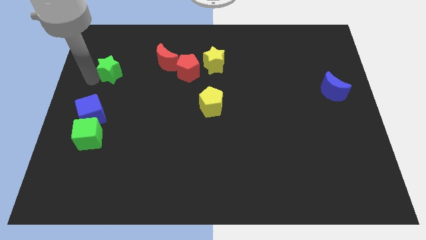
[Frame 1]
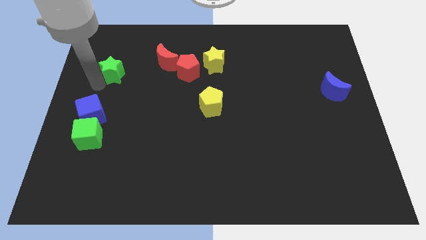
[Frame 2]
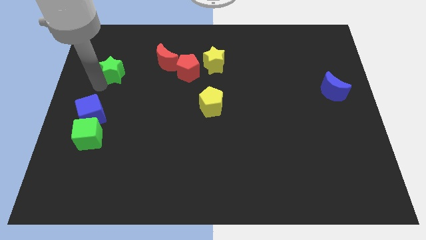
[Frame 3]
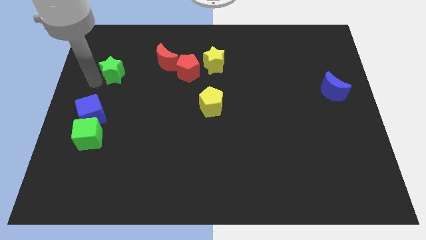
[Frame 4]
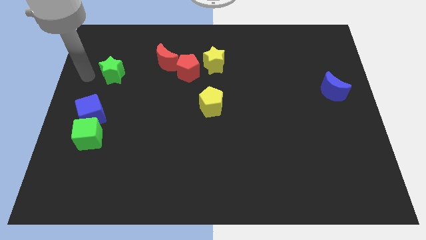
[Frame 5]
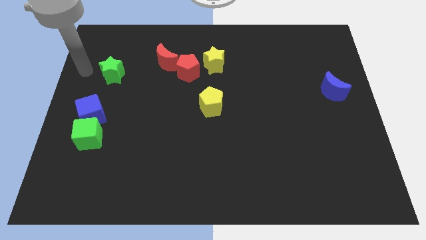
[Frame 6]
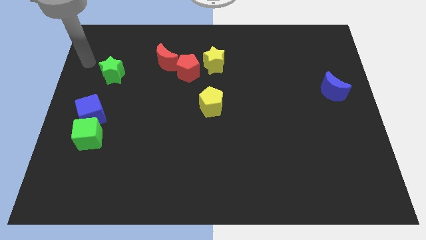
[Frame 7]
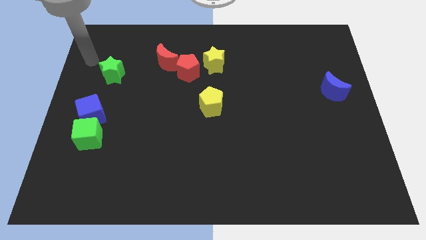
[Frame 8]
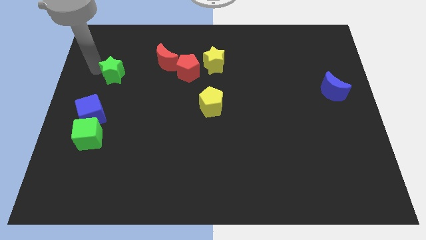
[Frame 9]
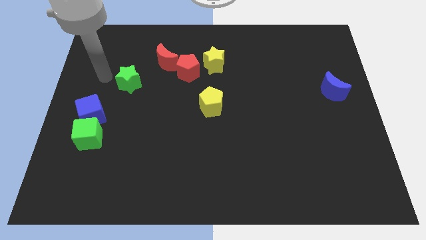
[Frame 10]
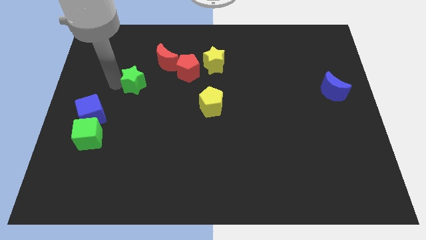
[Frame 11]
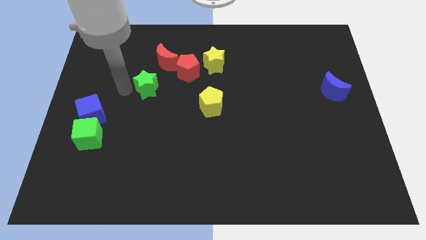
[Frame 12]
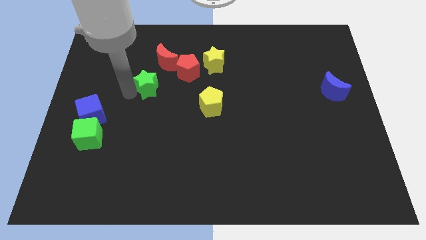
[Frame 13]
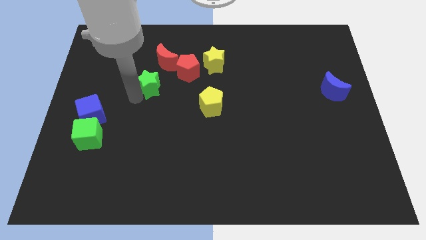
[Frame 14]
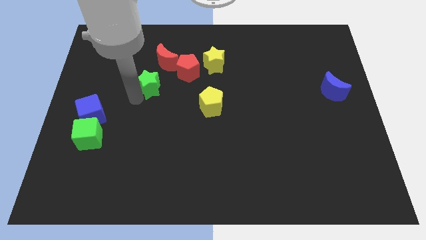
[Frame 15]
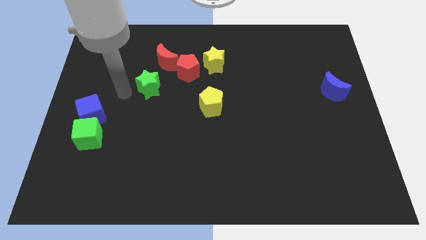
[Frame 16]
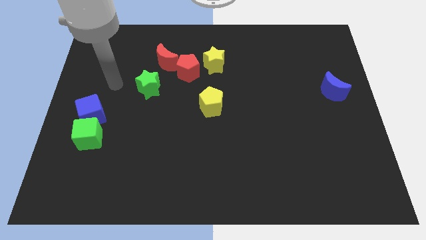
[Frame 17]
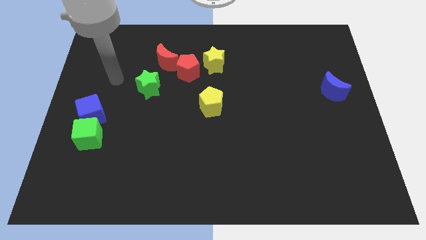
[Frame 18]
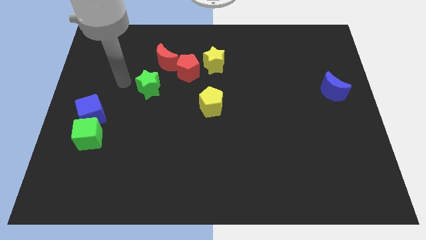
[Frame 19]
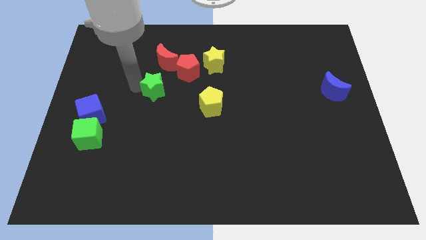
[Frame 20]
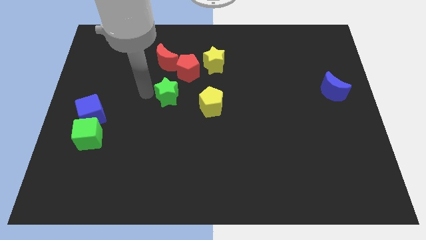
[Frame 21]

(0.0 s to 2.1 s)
slide green star towards yellow pentagon

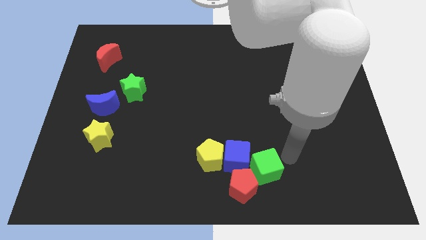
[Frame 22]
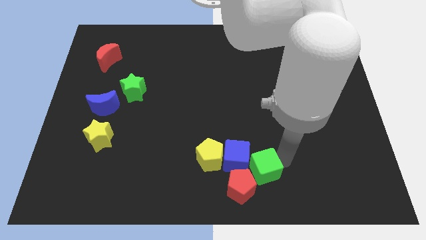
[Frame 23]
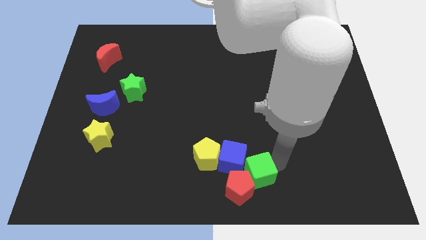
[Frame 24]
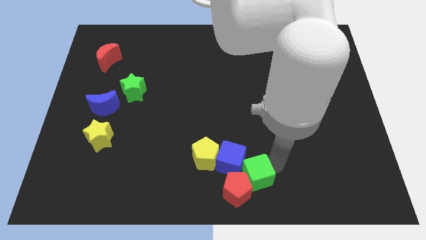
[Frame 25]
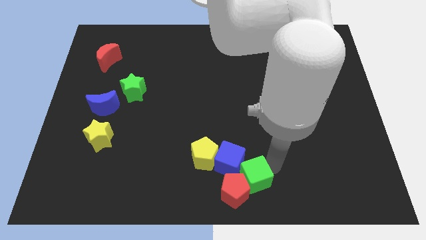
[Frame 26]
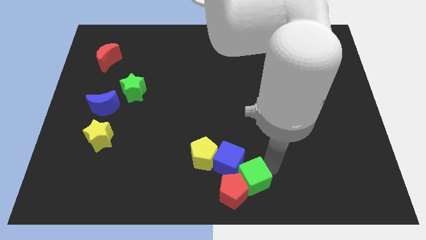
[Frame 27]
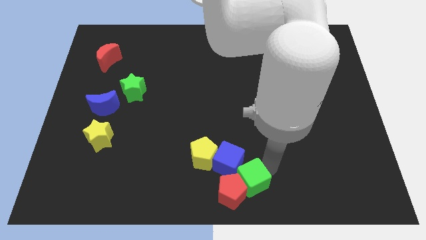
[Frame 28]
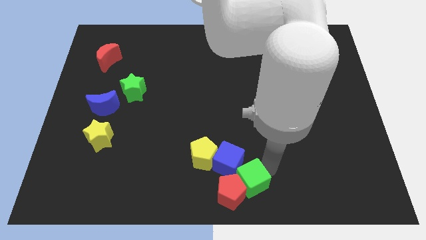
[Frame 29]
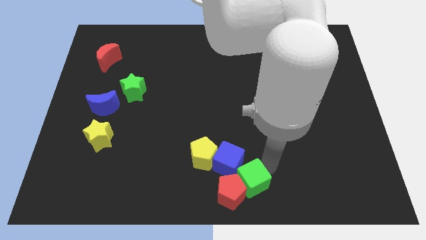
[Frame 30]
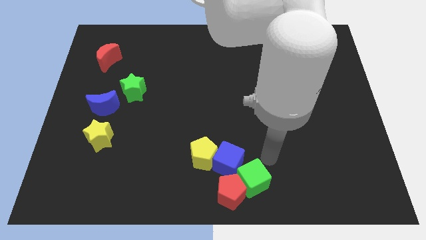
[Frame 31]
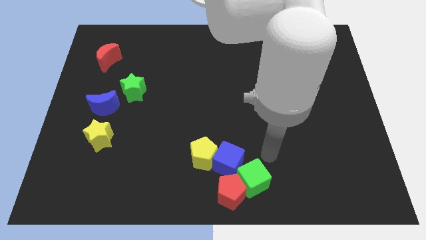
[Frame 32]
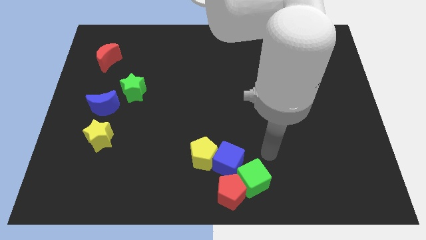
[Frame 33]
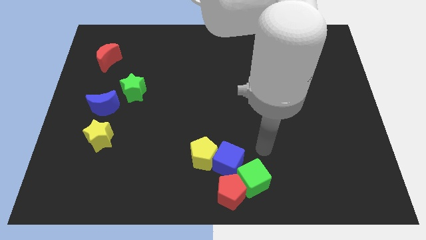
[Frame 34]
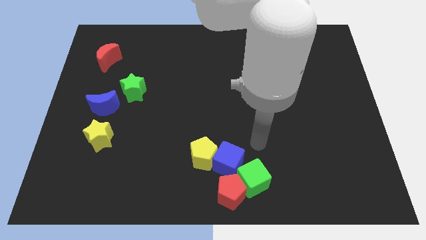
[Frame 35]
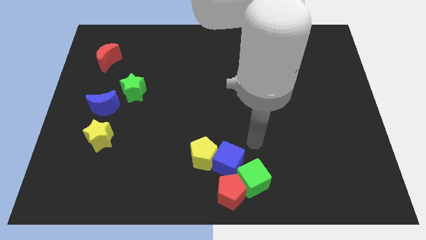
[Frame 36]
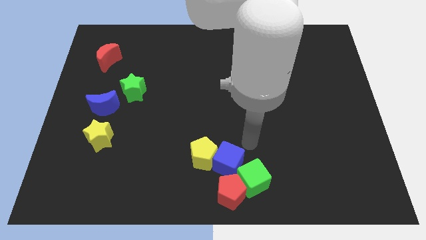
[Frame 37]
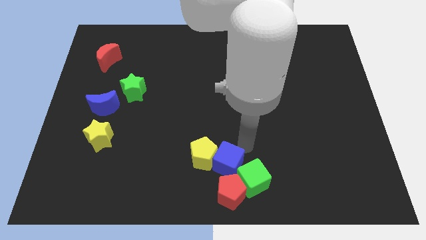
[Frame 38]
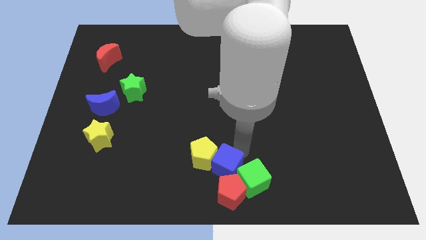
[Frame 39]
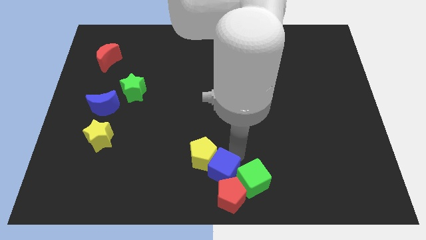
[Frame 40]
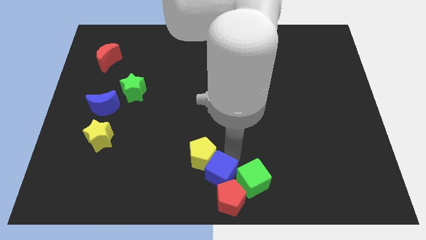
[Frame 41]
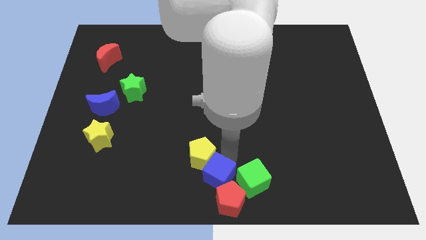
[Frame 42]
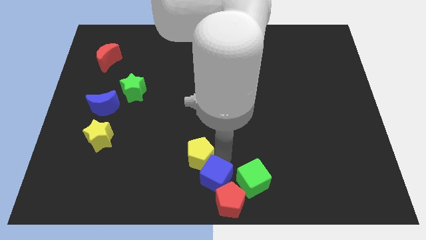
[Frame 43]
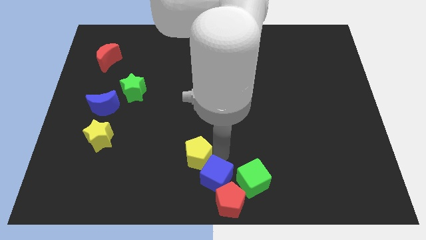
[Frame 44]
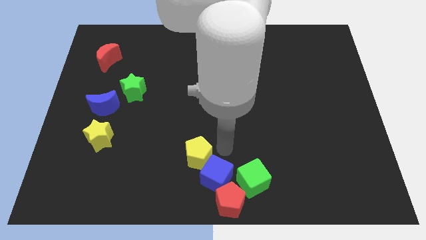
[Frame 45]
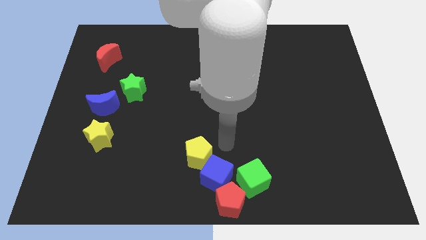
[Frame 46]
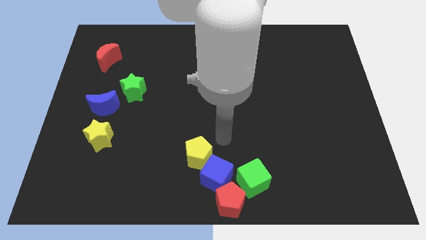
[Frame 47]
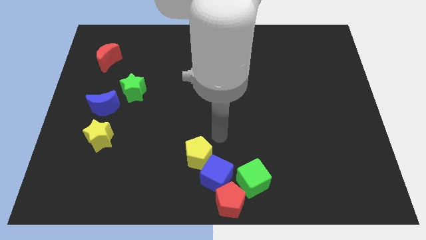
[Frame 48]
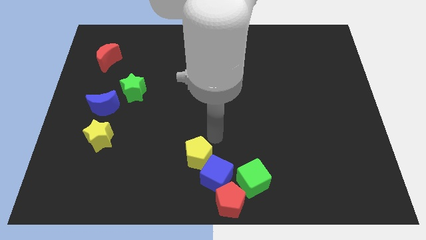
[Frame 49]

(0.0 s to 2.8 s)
place the blue cube in between the yellow penatgon and the red pentagon

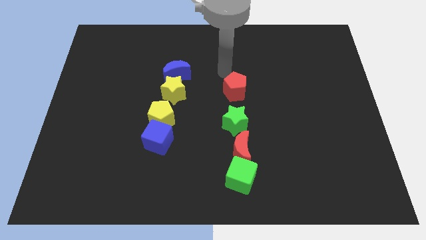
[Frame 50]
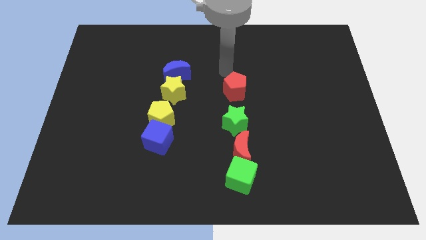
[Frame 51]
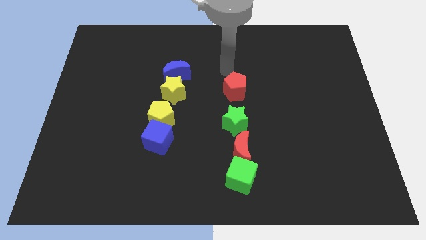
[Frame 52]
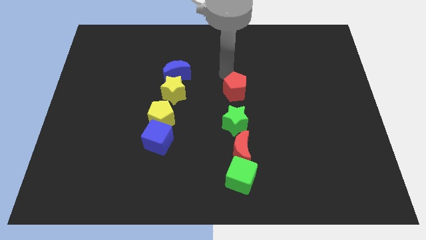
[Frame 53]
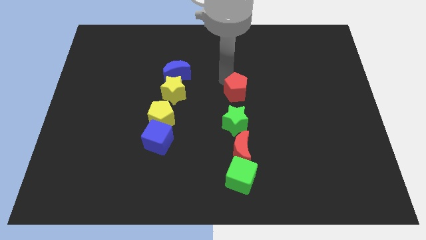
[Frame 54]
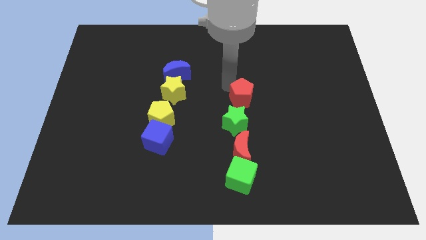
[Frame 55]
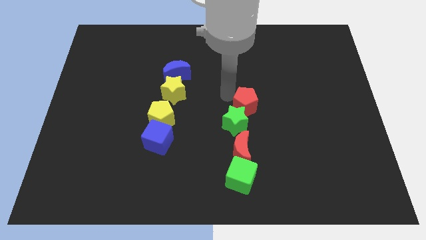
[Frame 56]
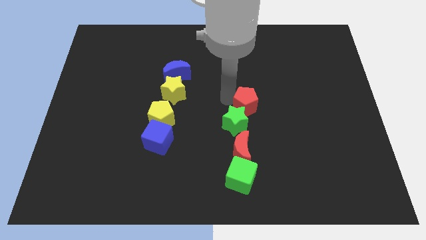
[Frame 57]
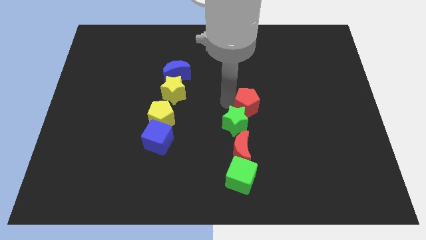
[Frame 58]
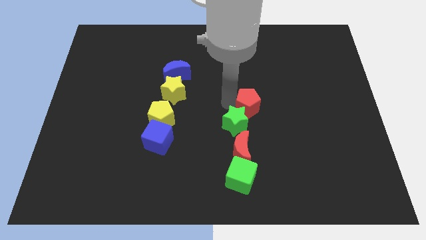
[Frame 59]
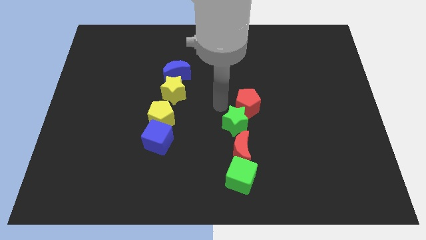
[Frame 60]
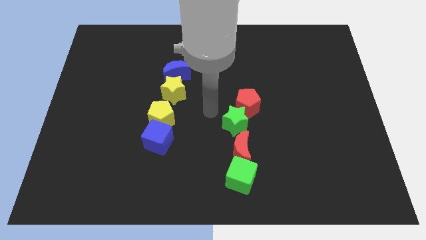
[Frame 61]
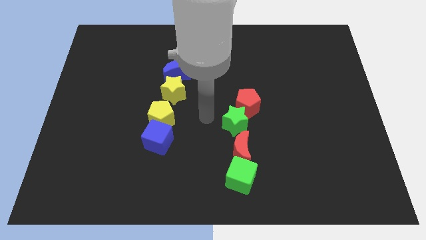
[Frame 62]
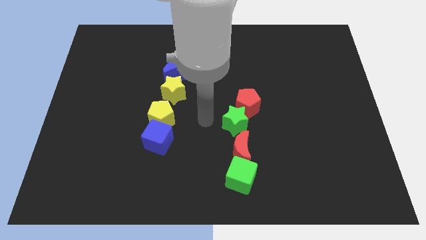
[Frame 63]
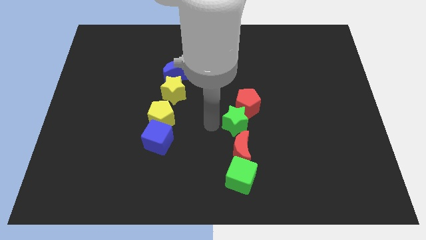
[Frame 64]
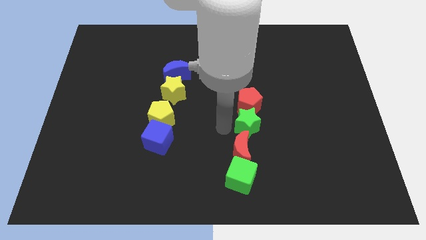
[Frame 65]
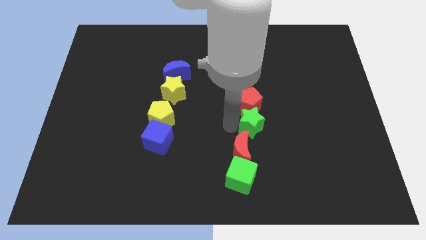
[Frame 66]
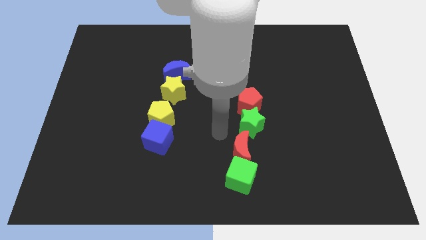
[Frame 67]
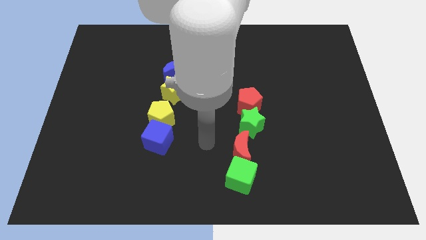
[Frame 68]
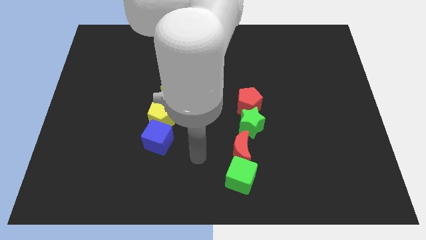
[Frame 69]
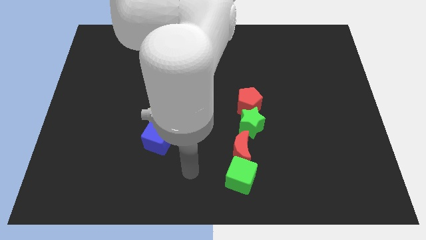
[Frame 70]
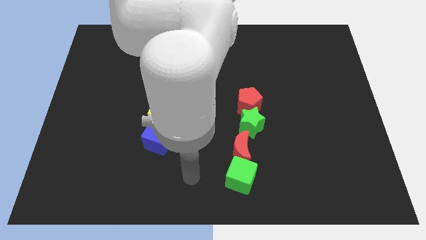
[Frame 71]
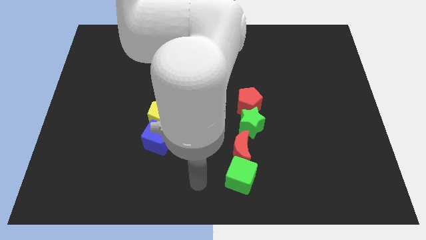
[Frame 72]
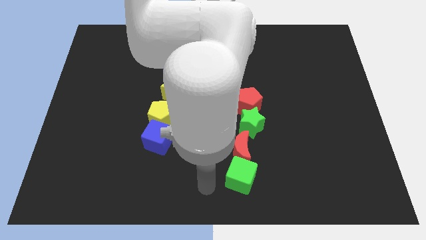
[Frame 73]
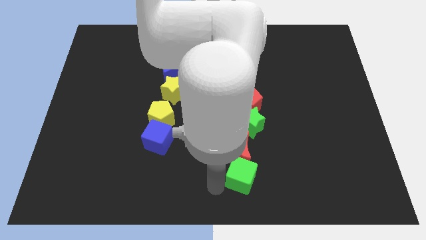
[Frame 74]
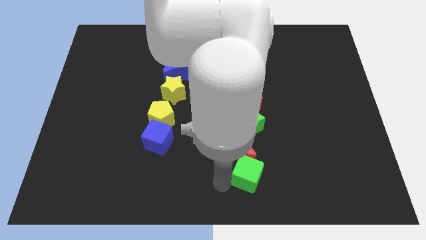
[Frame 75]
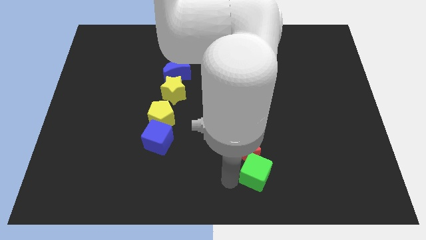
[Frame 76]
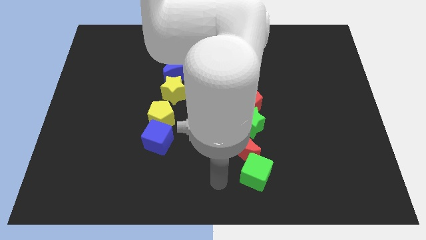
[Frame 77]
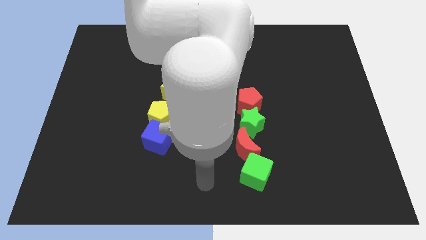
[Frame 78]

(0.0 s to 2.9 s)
adjust red and green blocks to form a vertical line

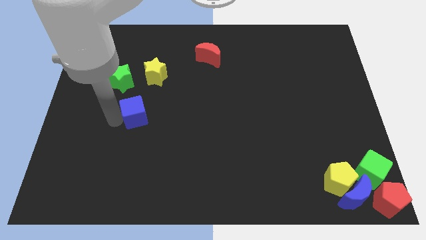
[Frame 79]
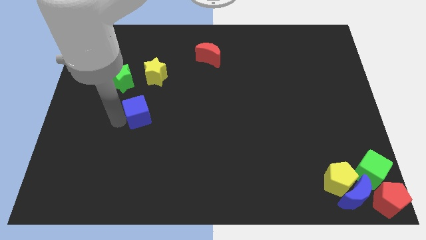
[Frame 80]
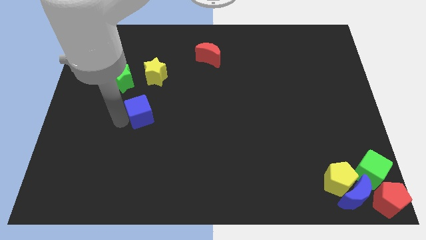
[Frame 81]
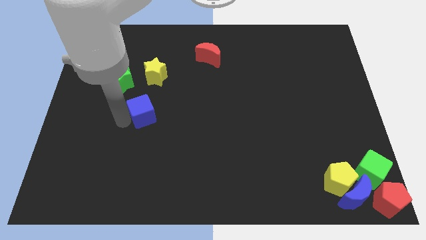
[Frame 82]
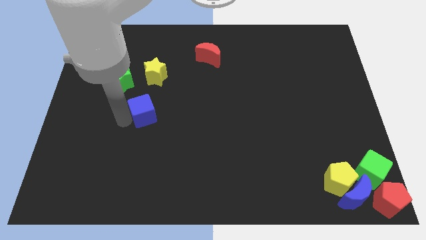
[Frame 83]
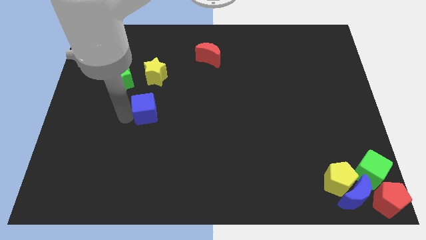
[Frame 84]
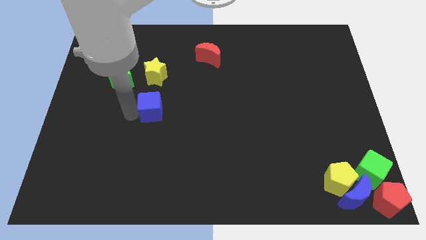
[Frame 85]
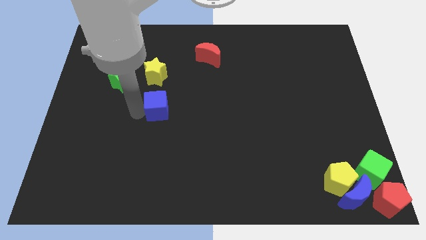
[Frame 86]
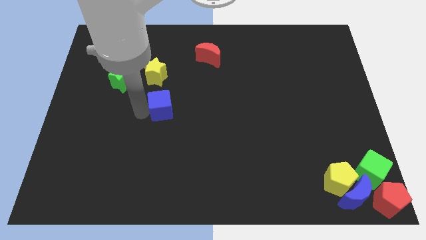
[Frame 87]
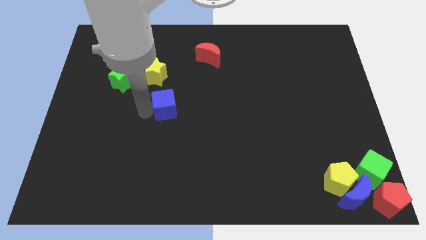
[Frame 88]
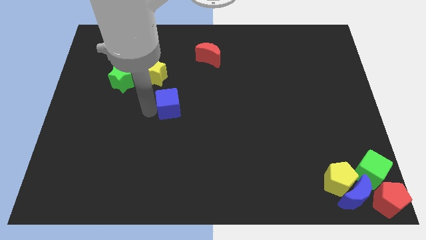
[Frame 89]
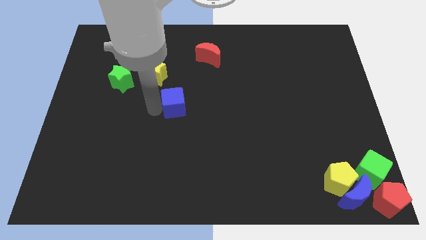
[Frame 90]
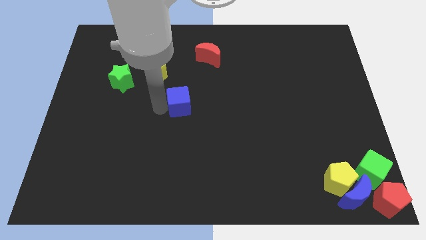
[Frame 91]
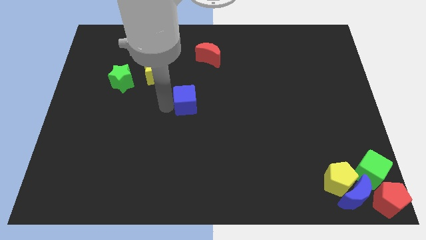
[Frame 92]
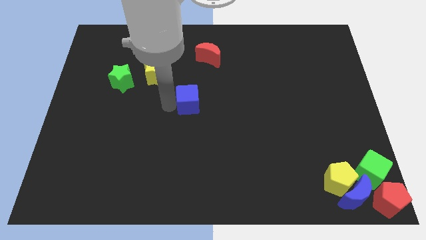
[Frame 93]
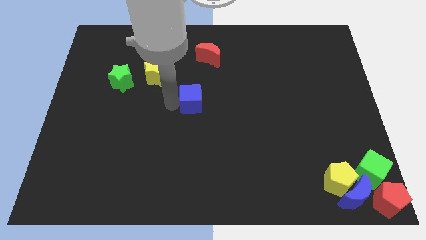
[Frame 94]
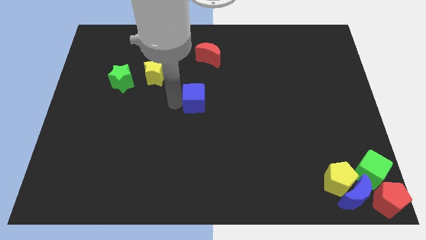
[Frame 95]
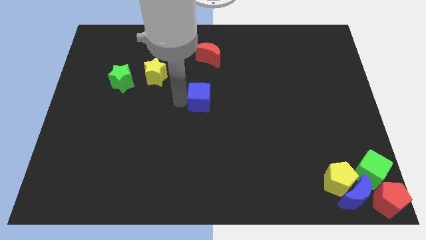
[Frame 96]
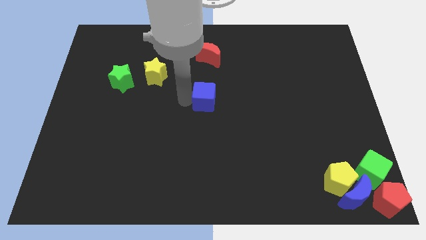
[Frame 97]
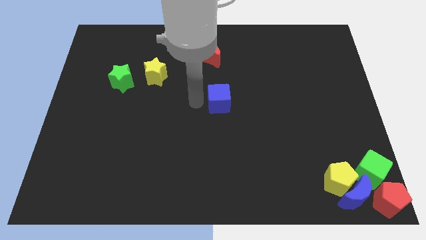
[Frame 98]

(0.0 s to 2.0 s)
push the blue cube to the center of the board
